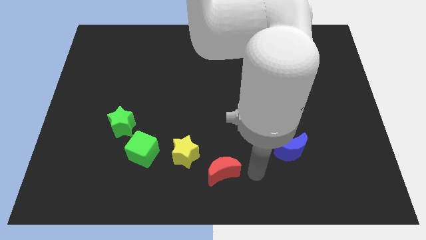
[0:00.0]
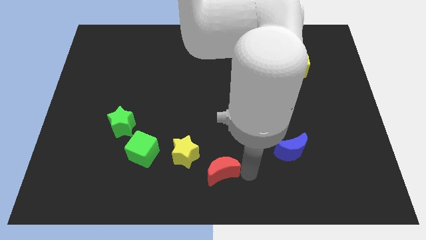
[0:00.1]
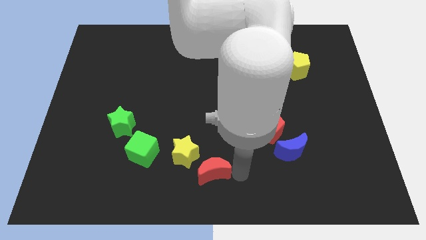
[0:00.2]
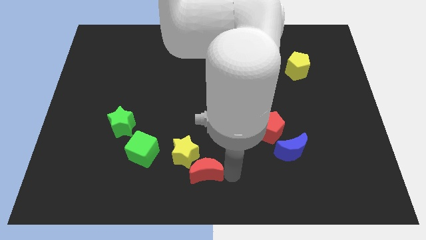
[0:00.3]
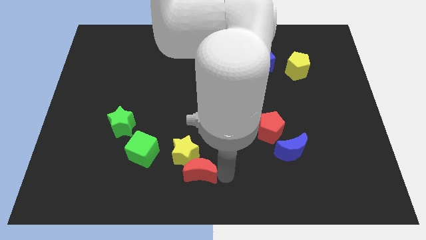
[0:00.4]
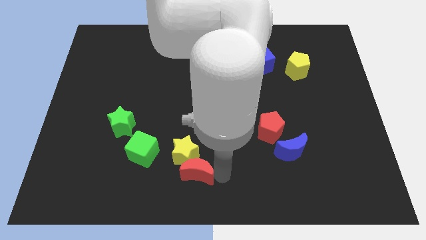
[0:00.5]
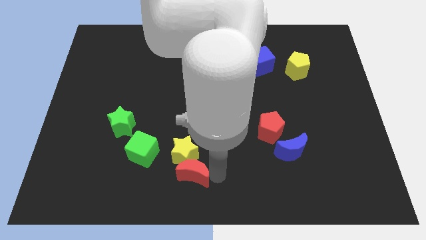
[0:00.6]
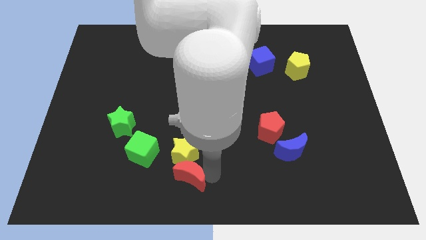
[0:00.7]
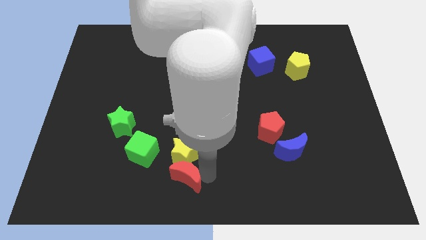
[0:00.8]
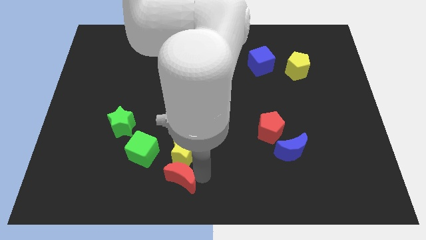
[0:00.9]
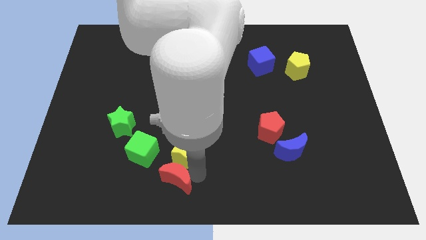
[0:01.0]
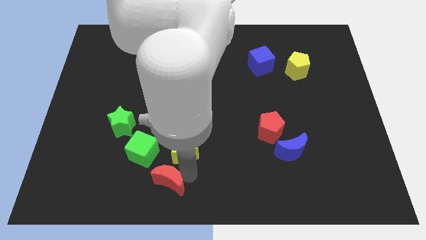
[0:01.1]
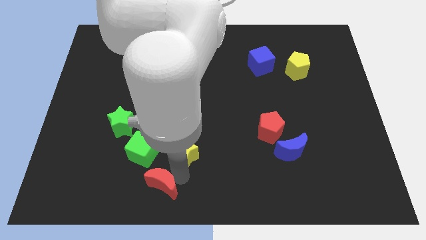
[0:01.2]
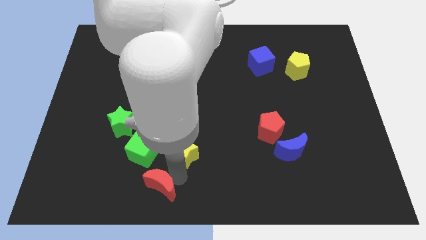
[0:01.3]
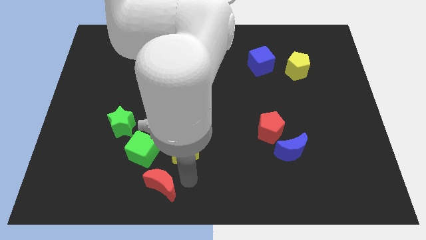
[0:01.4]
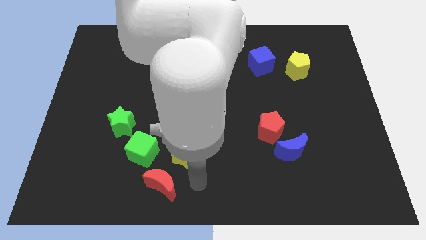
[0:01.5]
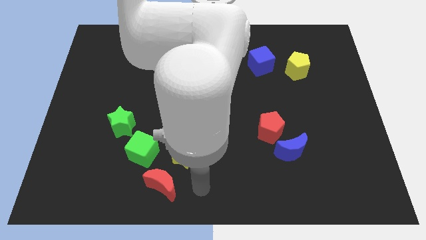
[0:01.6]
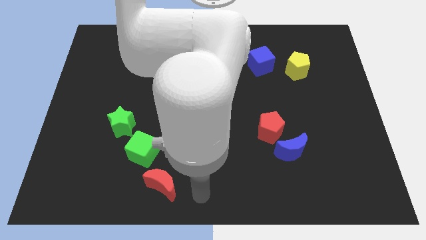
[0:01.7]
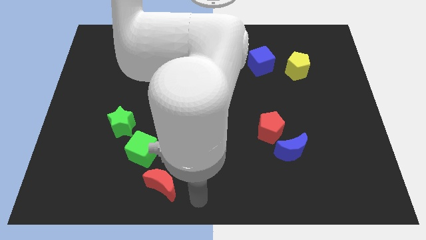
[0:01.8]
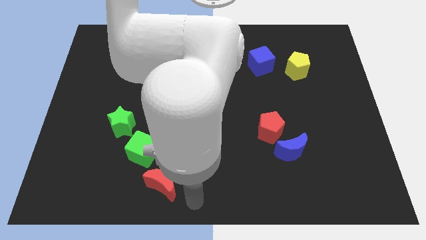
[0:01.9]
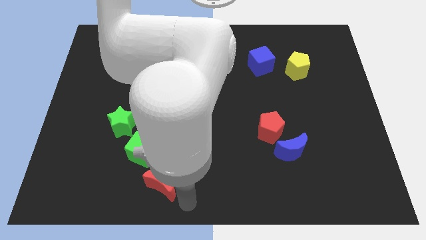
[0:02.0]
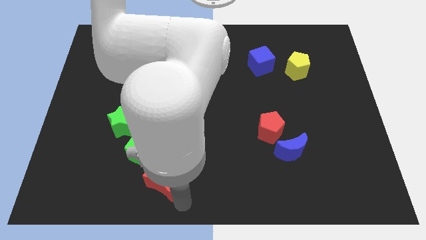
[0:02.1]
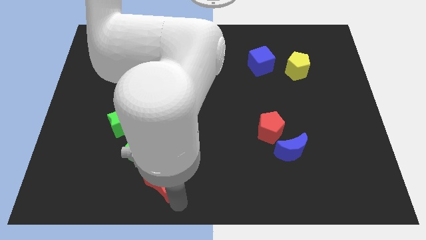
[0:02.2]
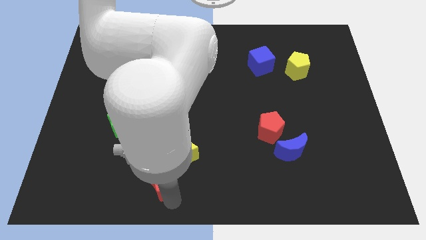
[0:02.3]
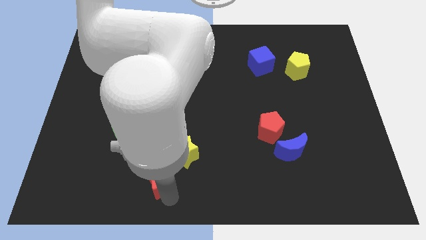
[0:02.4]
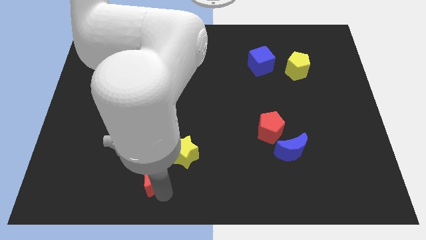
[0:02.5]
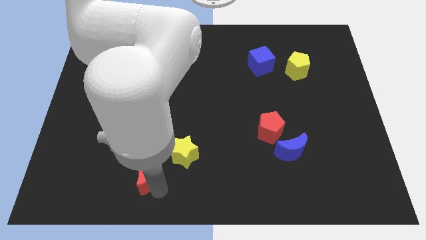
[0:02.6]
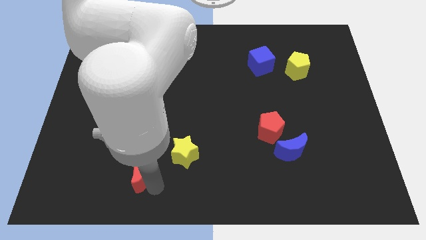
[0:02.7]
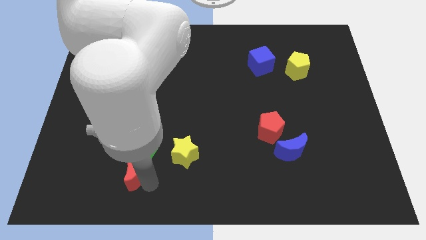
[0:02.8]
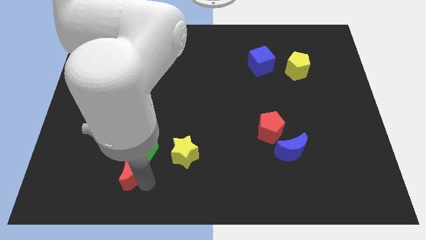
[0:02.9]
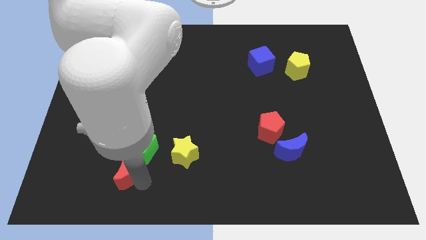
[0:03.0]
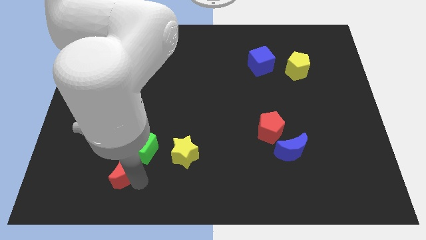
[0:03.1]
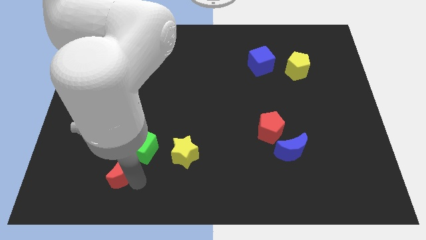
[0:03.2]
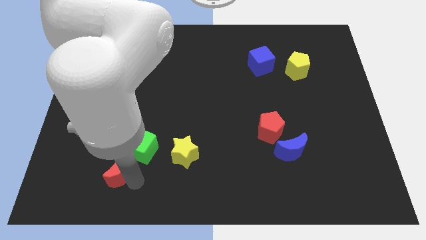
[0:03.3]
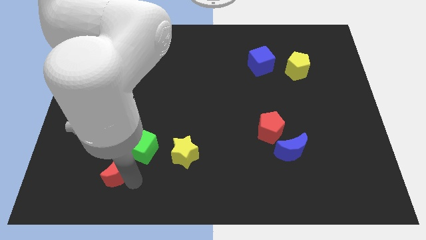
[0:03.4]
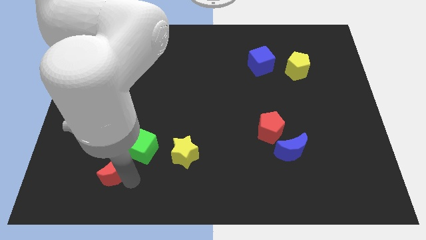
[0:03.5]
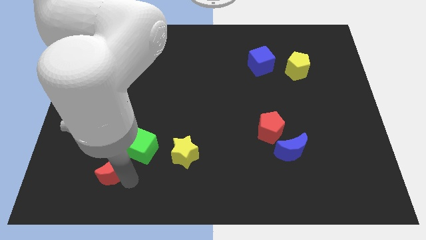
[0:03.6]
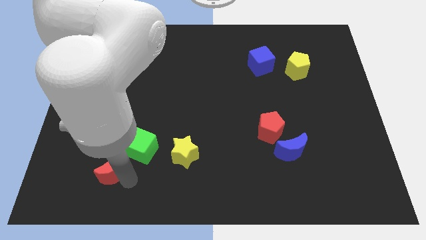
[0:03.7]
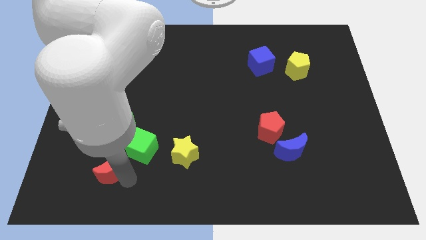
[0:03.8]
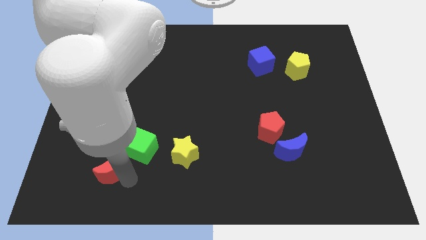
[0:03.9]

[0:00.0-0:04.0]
move the red crescent to the bottom left side of the green cube

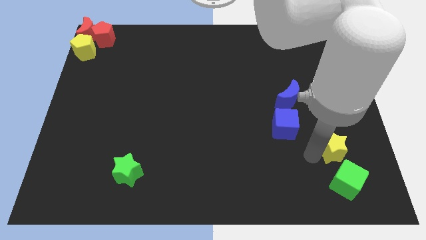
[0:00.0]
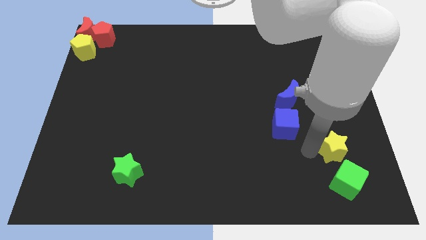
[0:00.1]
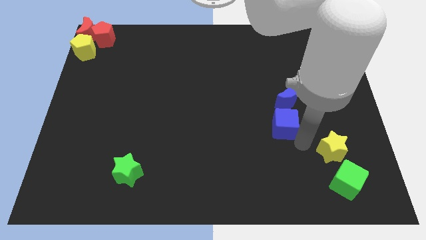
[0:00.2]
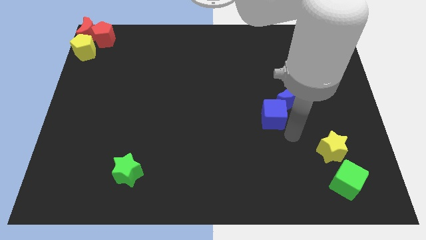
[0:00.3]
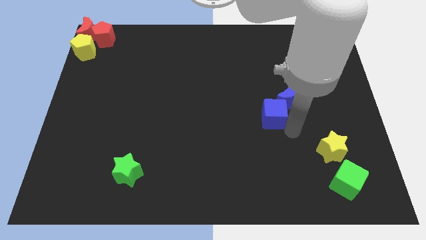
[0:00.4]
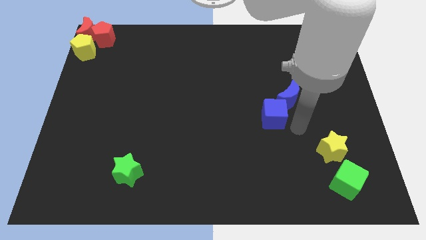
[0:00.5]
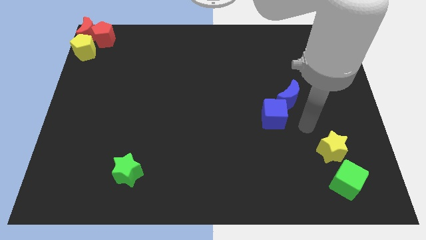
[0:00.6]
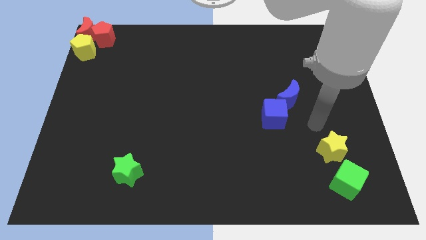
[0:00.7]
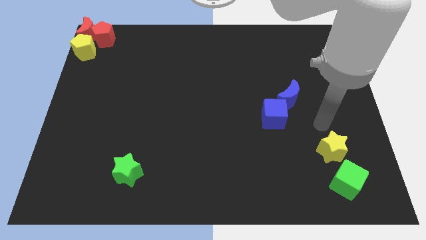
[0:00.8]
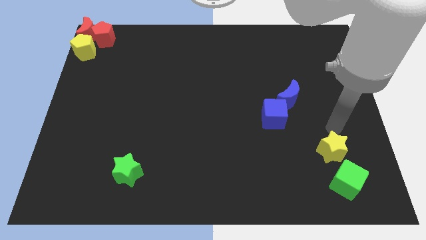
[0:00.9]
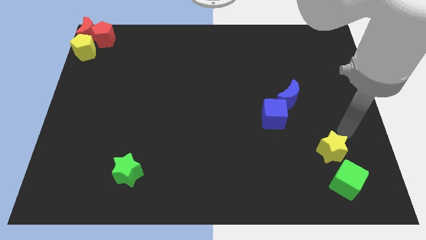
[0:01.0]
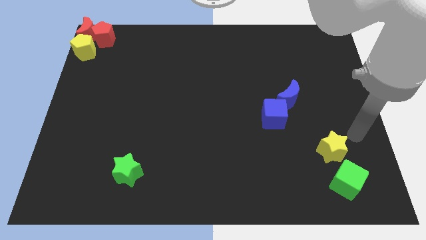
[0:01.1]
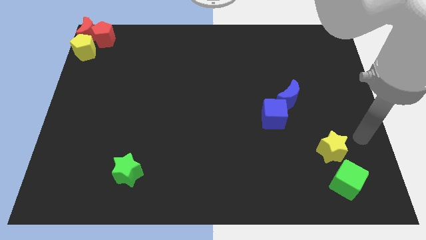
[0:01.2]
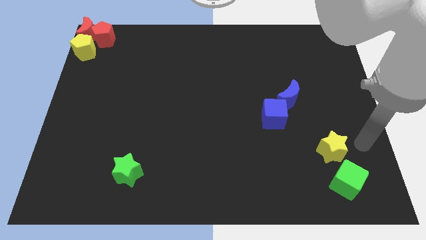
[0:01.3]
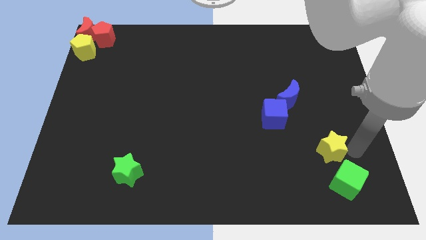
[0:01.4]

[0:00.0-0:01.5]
push the blue cube into the blue crescent

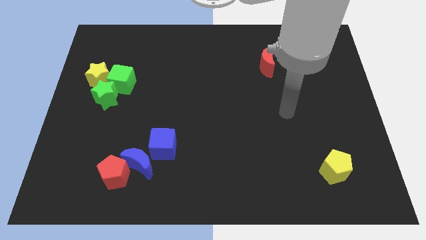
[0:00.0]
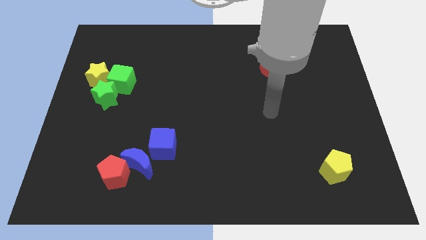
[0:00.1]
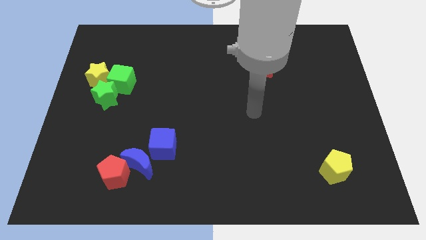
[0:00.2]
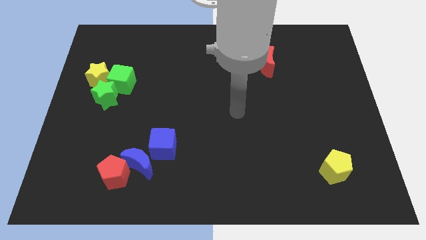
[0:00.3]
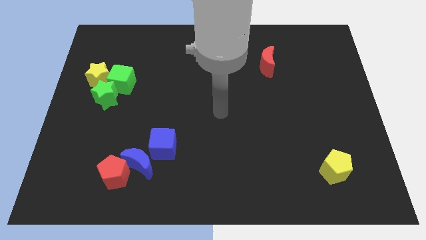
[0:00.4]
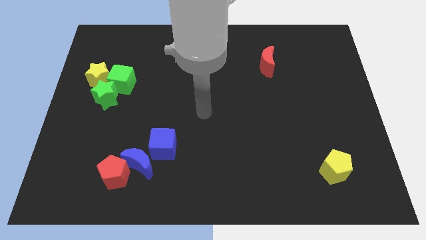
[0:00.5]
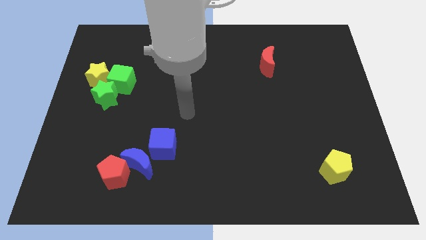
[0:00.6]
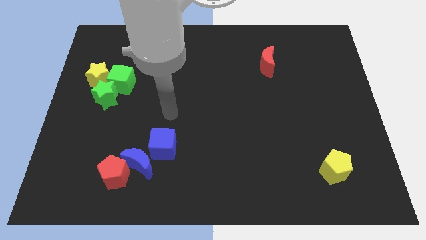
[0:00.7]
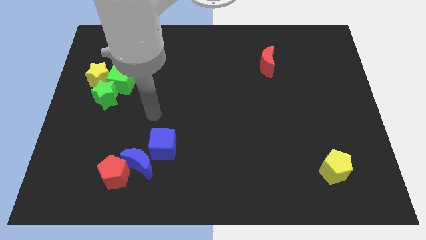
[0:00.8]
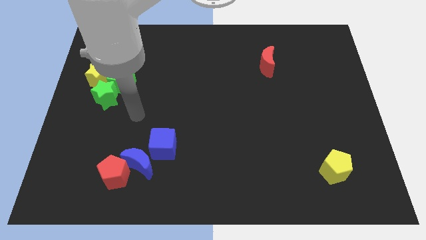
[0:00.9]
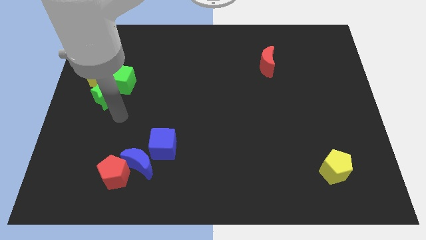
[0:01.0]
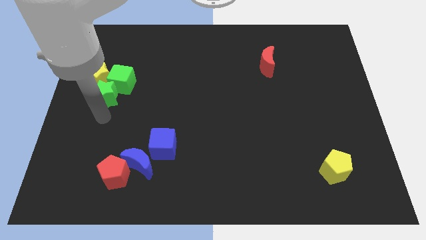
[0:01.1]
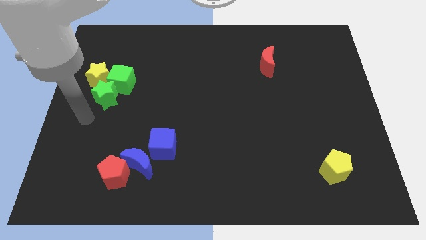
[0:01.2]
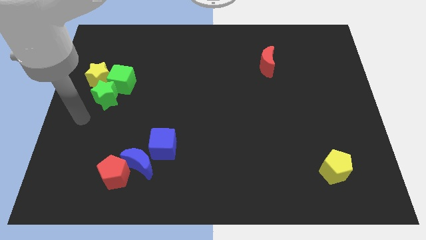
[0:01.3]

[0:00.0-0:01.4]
move the arm at the left center of the board

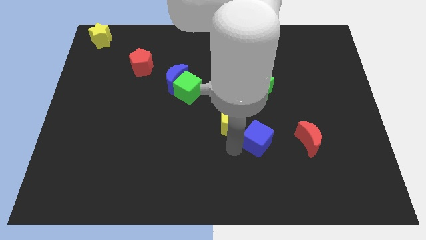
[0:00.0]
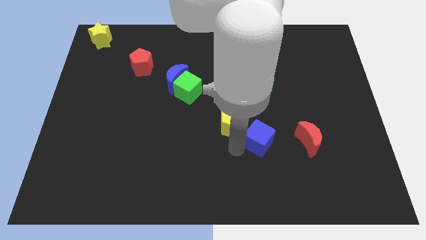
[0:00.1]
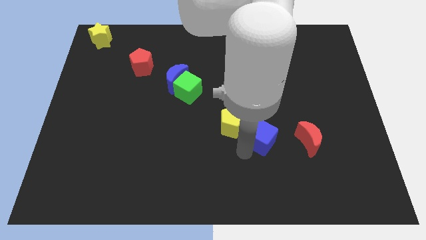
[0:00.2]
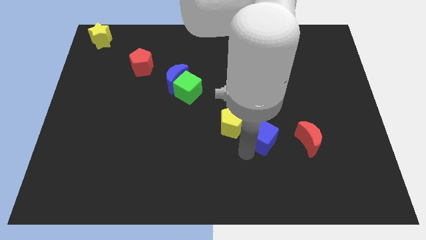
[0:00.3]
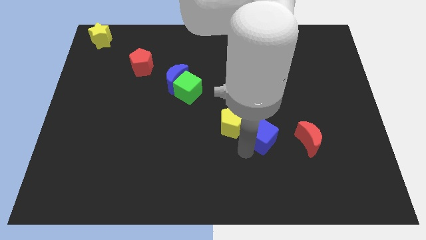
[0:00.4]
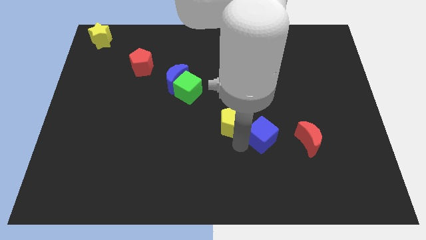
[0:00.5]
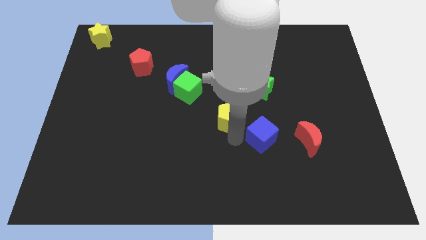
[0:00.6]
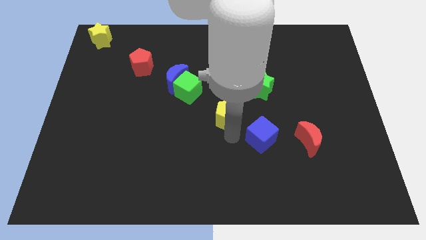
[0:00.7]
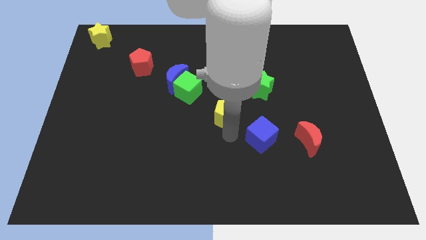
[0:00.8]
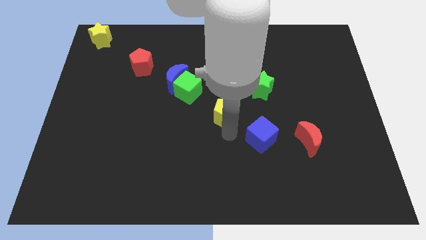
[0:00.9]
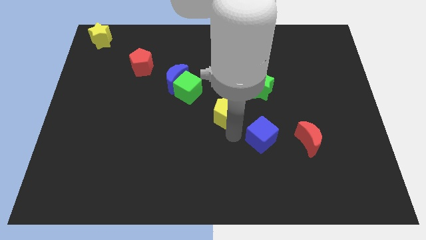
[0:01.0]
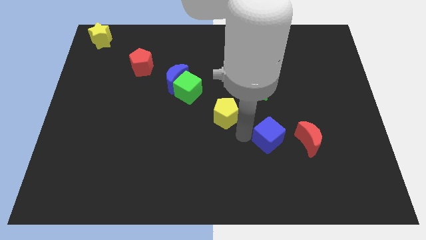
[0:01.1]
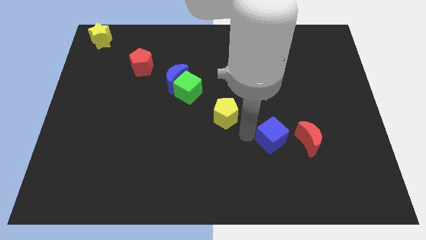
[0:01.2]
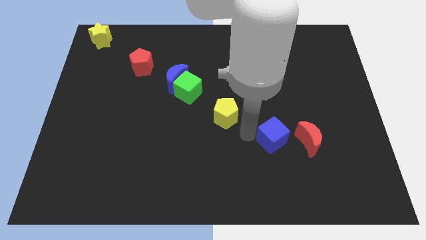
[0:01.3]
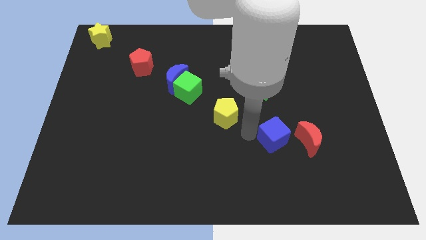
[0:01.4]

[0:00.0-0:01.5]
move the yellow pentagon slightly upwards

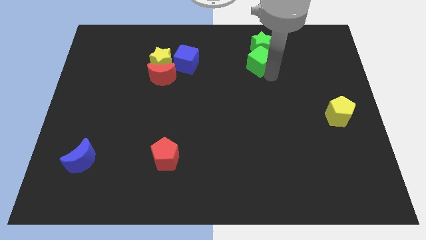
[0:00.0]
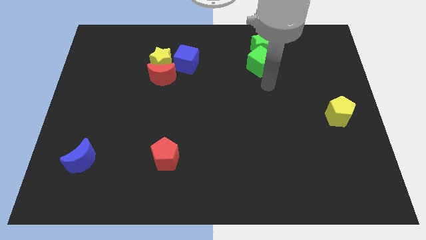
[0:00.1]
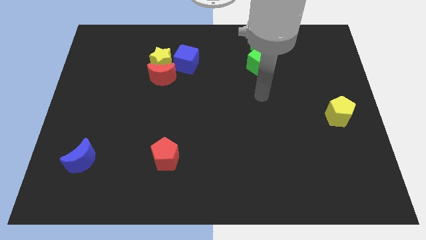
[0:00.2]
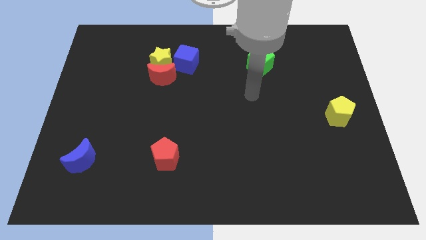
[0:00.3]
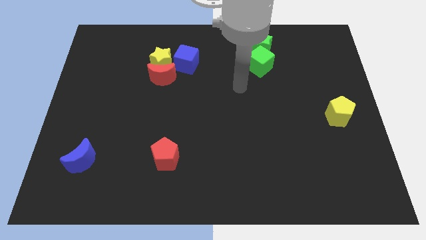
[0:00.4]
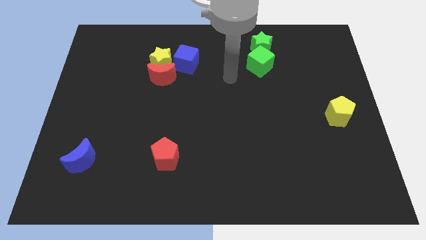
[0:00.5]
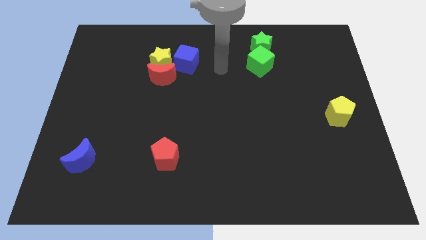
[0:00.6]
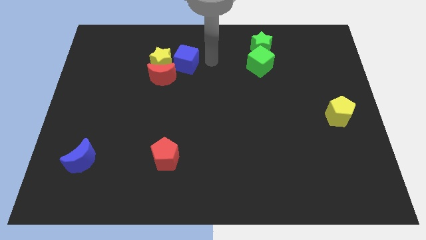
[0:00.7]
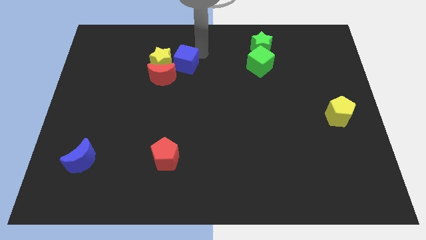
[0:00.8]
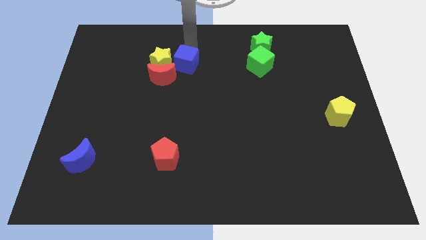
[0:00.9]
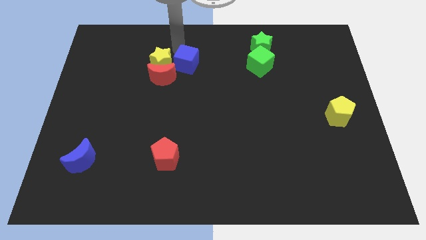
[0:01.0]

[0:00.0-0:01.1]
move your arm away from green cube
